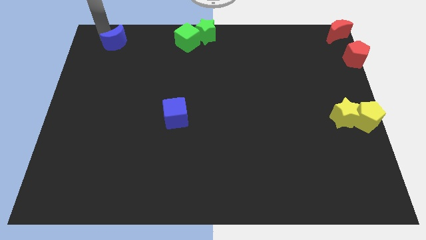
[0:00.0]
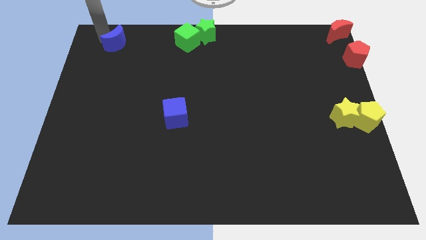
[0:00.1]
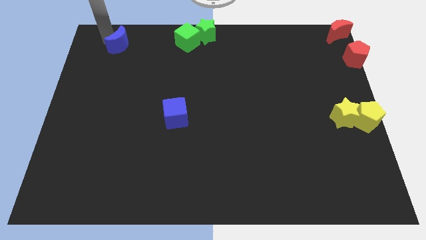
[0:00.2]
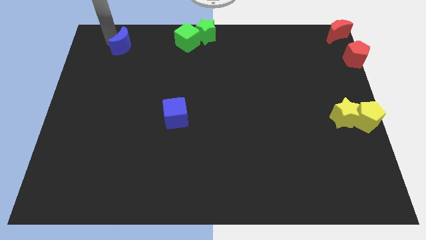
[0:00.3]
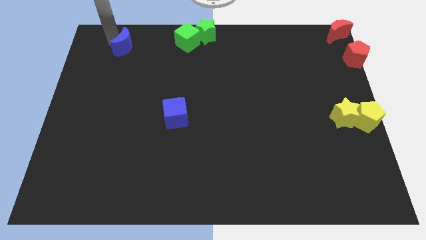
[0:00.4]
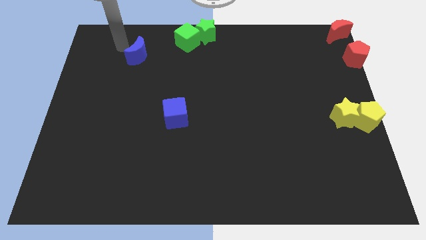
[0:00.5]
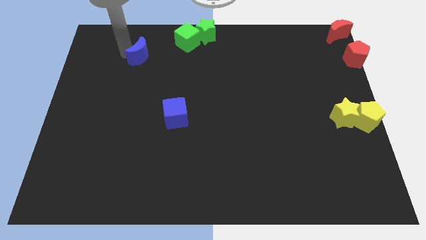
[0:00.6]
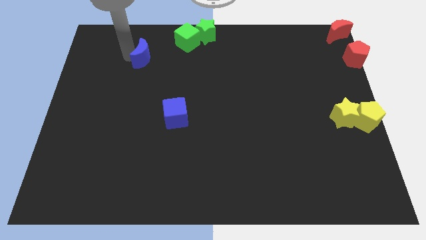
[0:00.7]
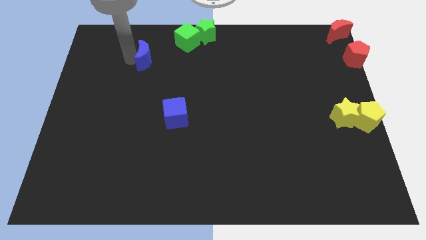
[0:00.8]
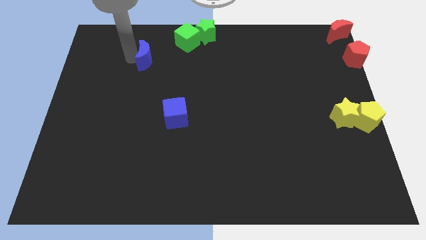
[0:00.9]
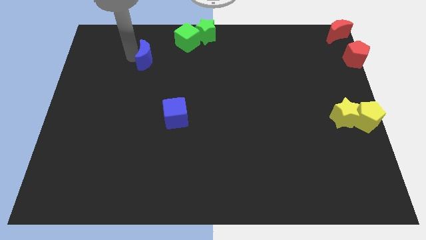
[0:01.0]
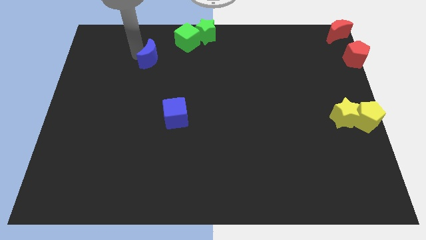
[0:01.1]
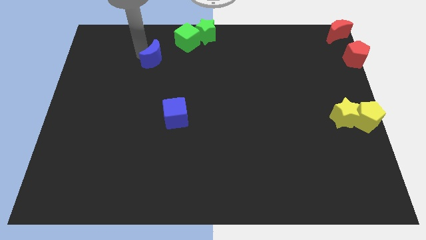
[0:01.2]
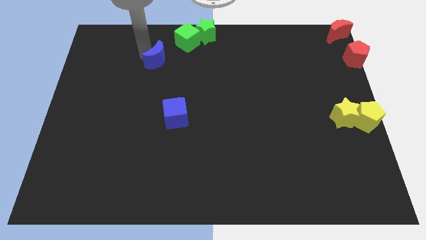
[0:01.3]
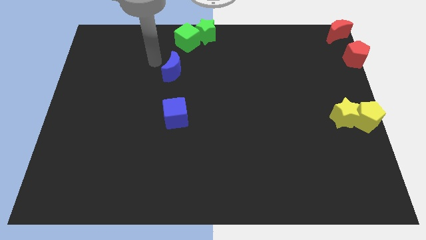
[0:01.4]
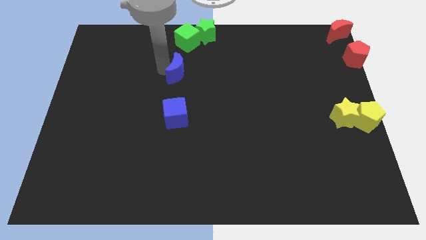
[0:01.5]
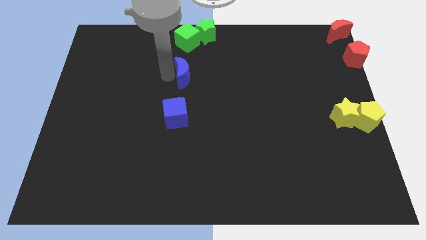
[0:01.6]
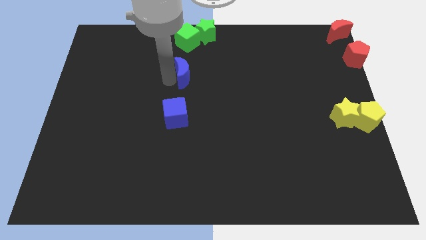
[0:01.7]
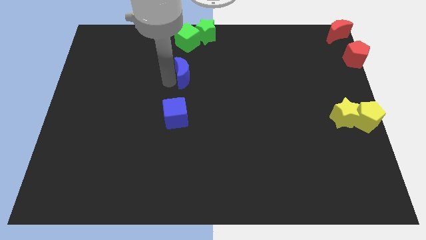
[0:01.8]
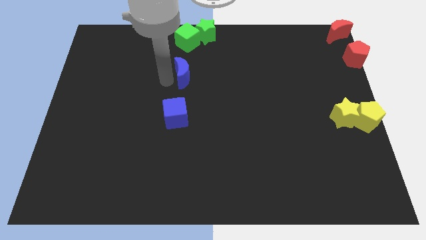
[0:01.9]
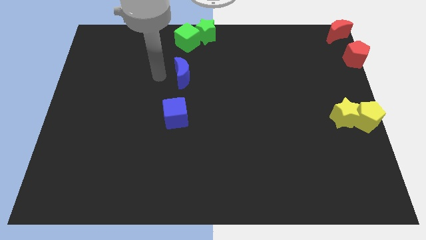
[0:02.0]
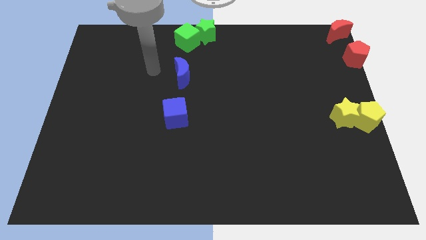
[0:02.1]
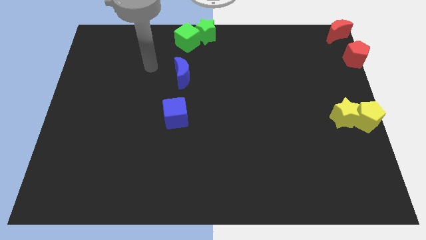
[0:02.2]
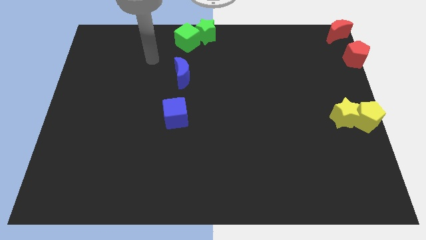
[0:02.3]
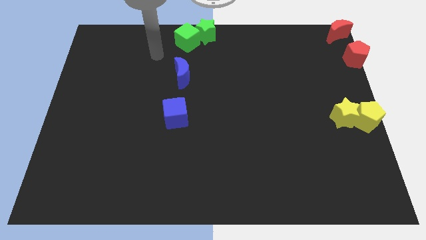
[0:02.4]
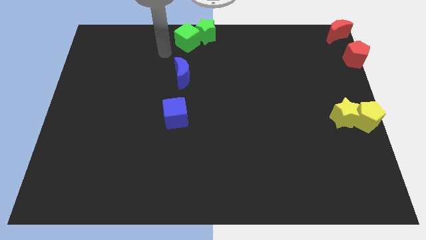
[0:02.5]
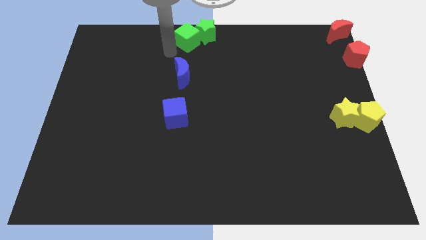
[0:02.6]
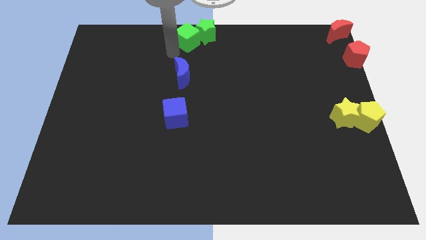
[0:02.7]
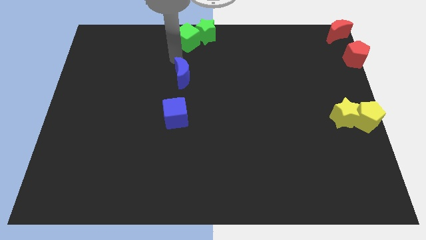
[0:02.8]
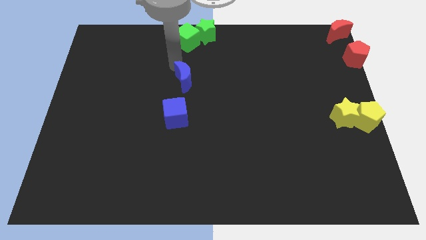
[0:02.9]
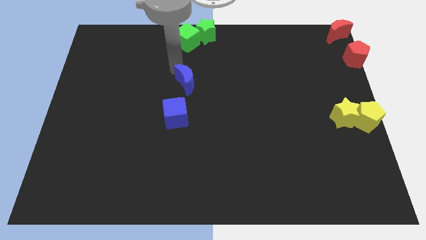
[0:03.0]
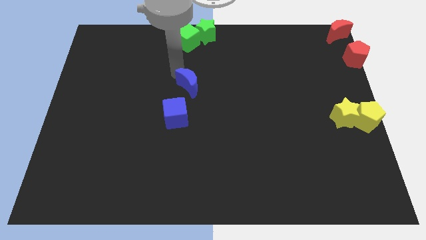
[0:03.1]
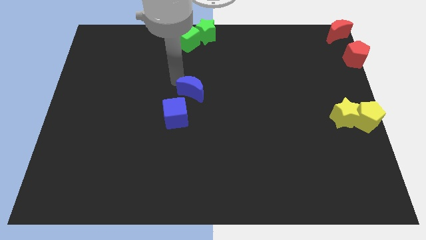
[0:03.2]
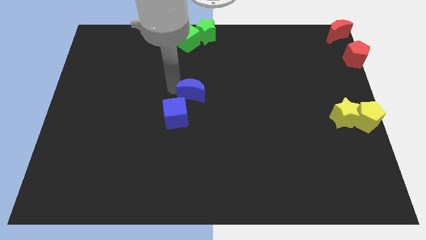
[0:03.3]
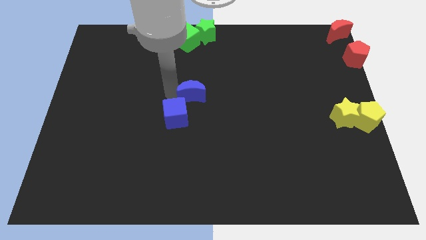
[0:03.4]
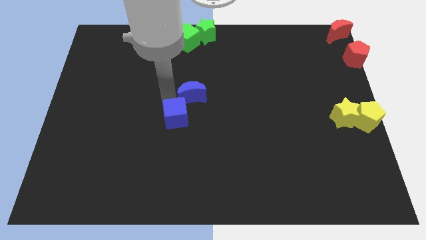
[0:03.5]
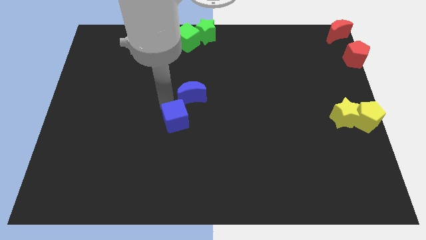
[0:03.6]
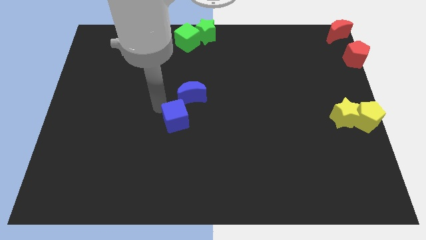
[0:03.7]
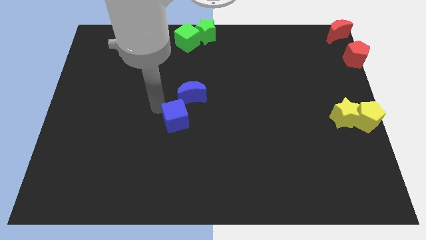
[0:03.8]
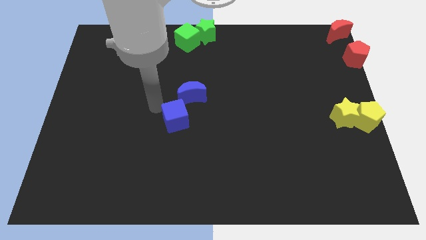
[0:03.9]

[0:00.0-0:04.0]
move the blue crescent to the center of the board

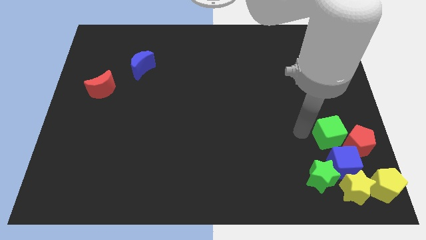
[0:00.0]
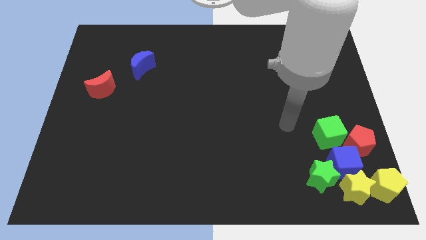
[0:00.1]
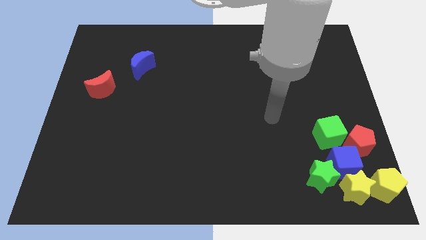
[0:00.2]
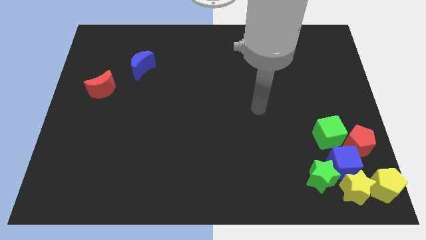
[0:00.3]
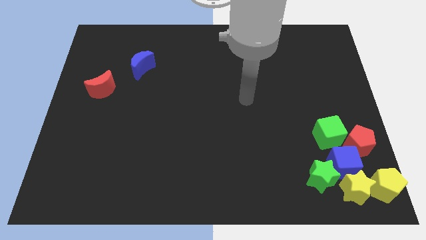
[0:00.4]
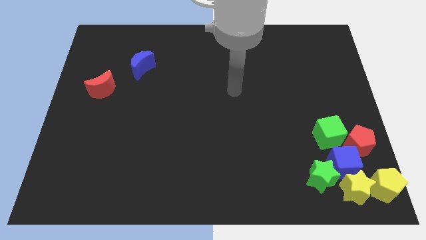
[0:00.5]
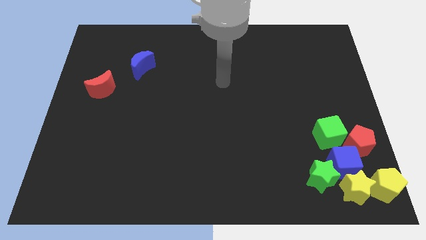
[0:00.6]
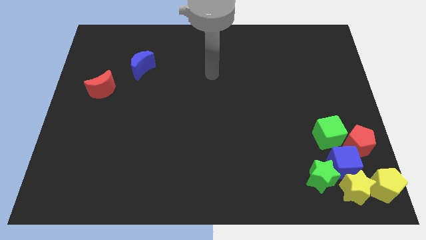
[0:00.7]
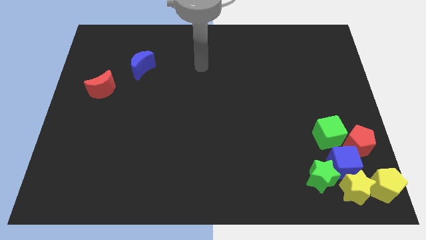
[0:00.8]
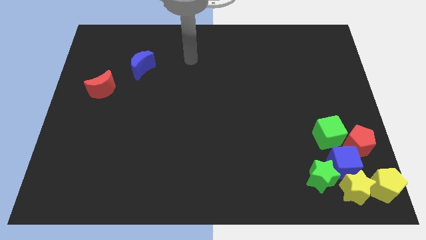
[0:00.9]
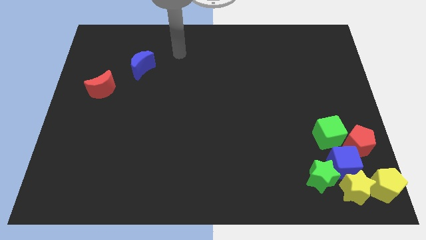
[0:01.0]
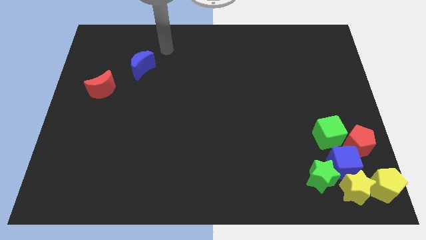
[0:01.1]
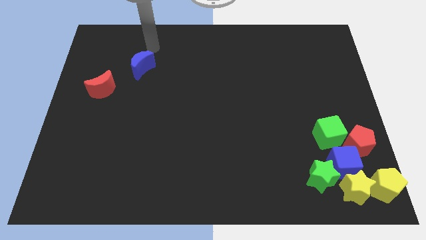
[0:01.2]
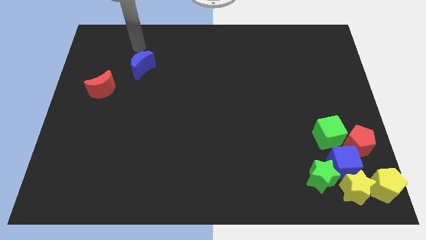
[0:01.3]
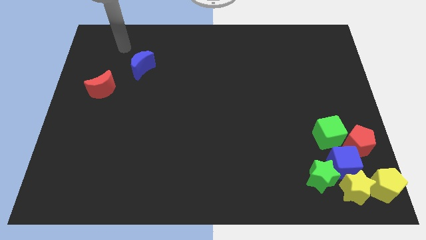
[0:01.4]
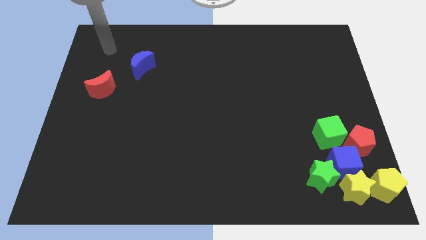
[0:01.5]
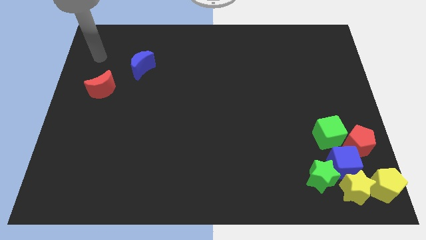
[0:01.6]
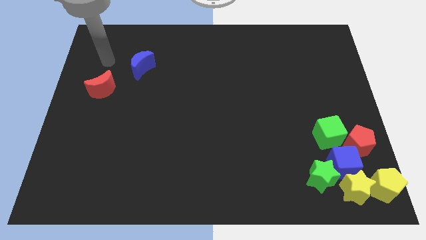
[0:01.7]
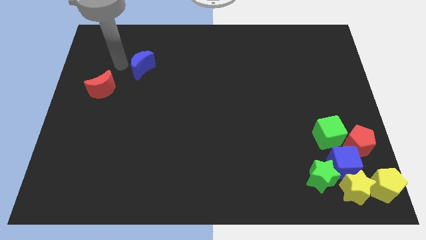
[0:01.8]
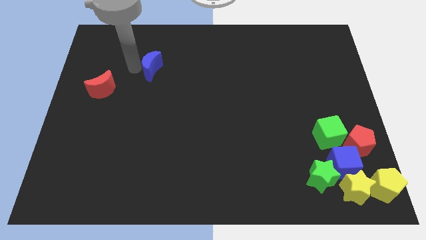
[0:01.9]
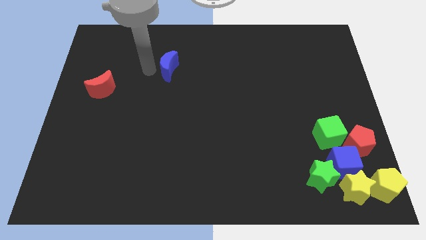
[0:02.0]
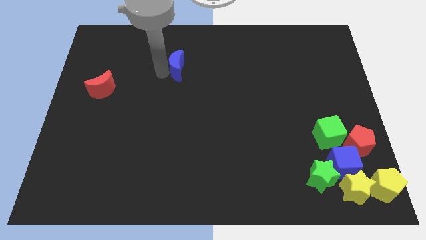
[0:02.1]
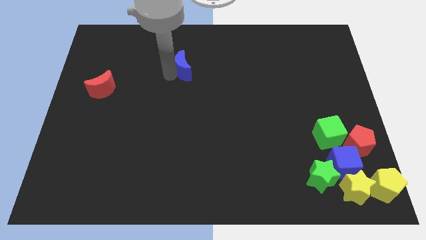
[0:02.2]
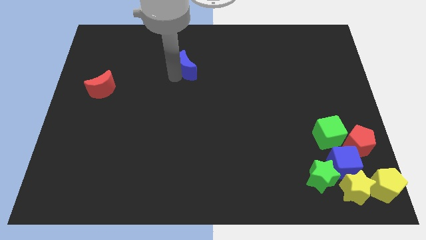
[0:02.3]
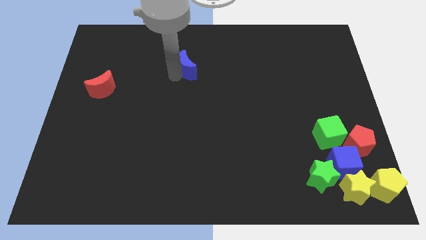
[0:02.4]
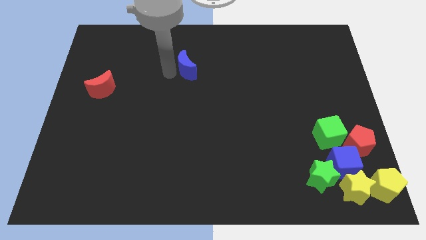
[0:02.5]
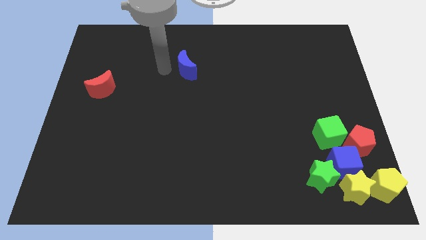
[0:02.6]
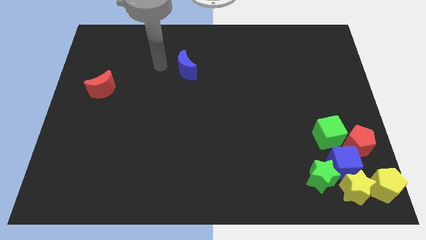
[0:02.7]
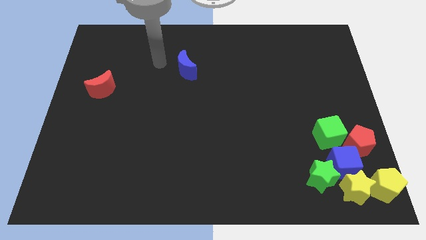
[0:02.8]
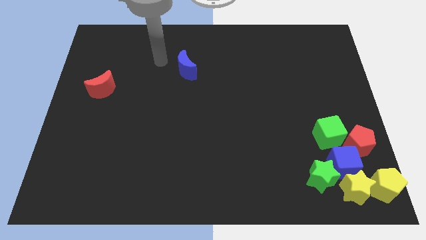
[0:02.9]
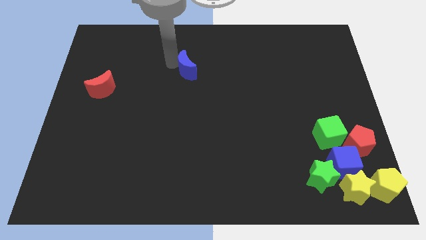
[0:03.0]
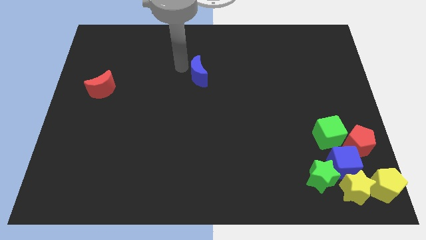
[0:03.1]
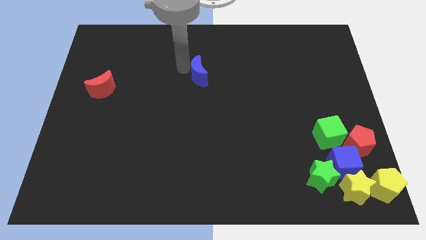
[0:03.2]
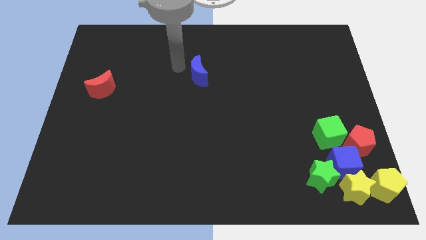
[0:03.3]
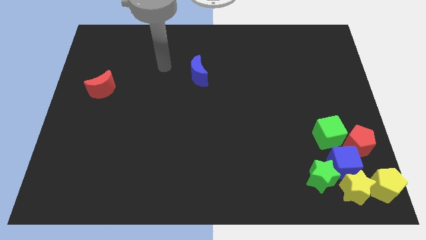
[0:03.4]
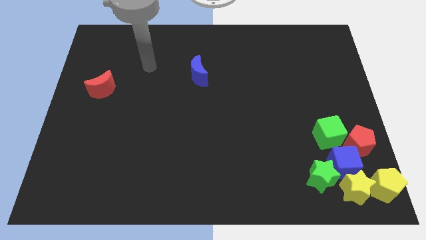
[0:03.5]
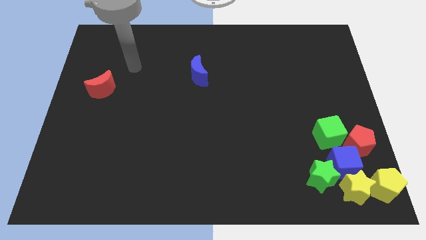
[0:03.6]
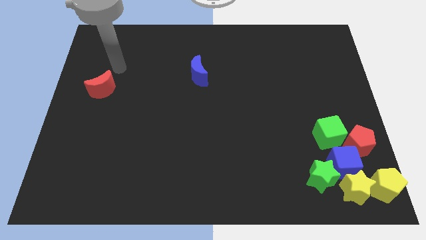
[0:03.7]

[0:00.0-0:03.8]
push the blue crescent to the right of the board
